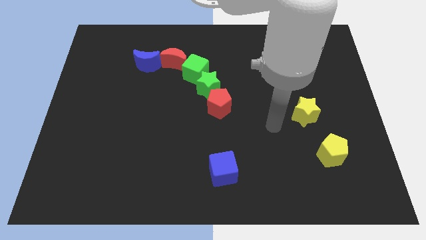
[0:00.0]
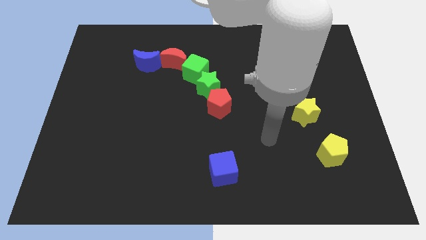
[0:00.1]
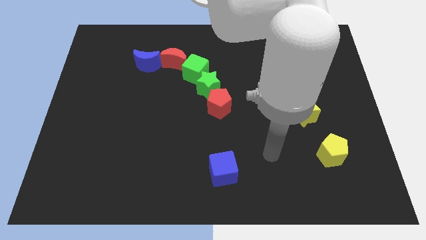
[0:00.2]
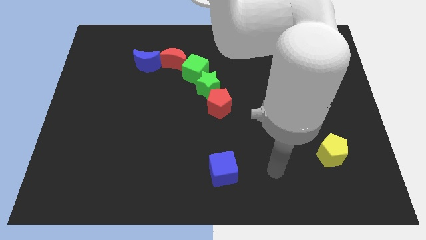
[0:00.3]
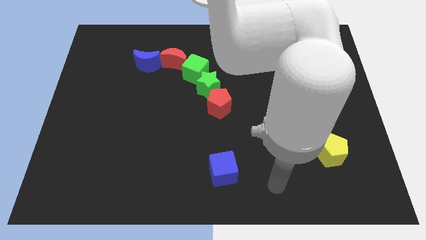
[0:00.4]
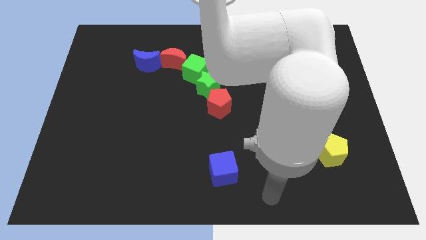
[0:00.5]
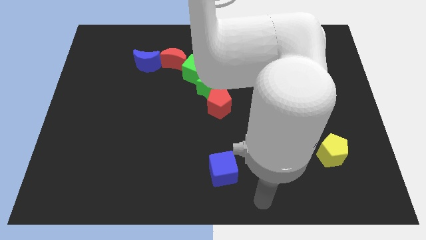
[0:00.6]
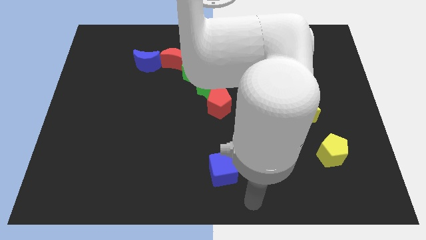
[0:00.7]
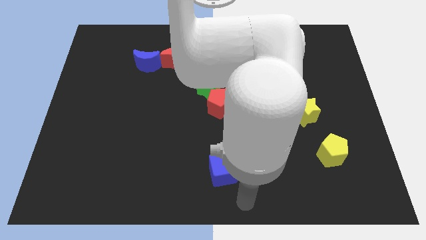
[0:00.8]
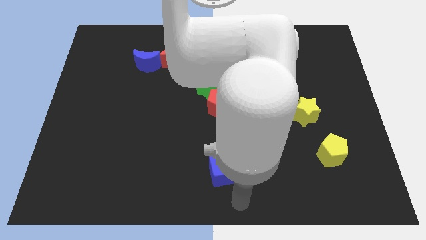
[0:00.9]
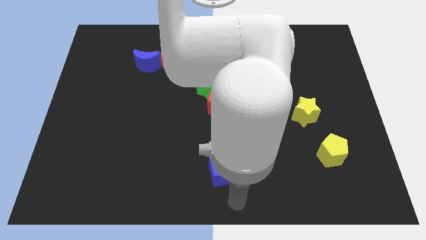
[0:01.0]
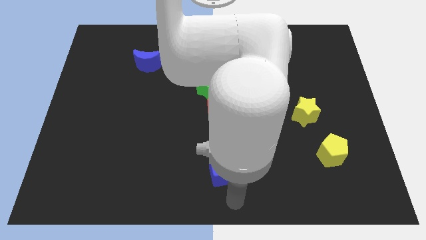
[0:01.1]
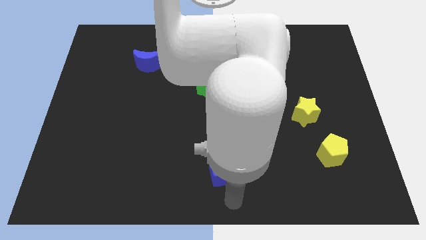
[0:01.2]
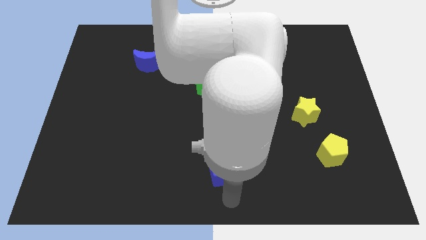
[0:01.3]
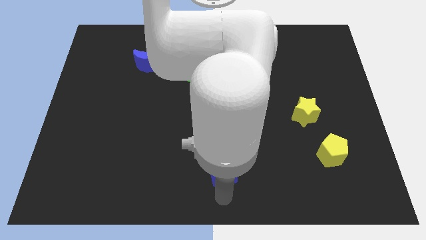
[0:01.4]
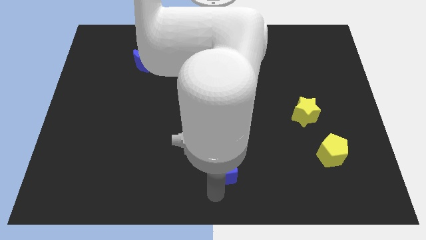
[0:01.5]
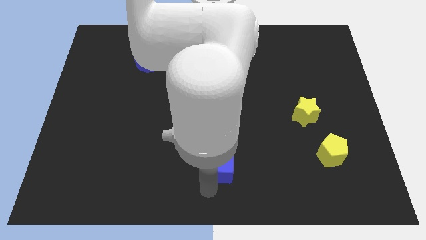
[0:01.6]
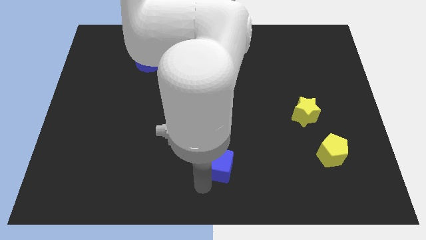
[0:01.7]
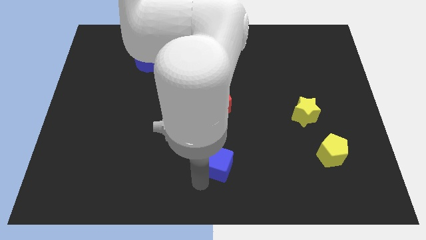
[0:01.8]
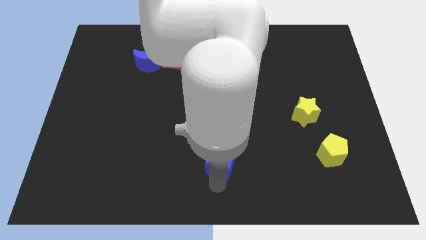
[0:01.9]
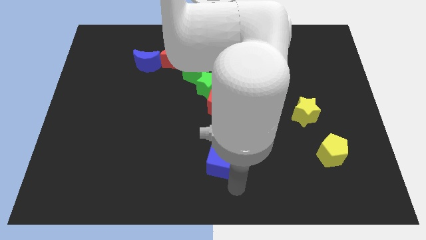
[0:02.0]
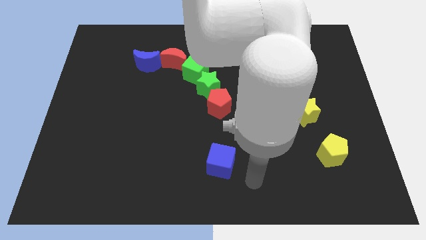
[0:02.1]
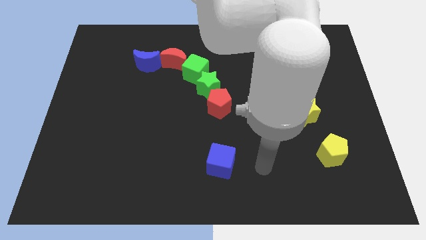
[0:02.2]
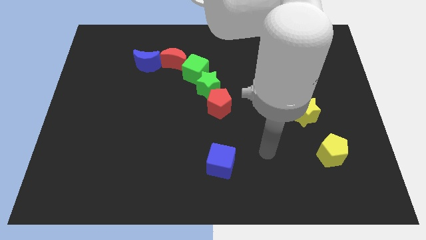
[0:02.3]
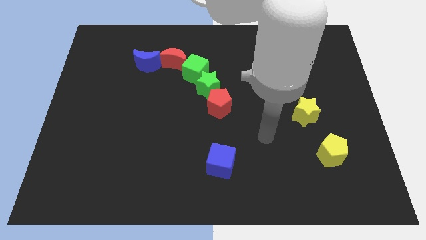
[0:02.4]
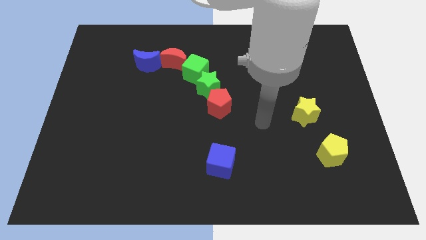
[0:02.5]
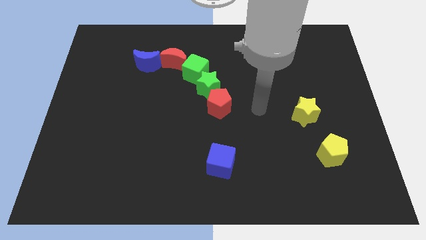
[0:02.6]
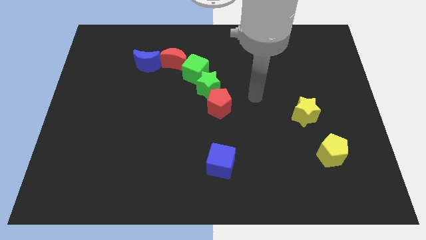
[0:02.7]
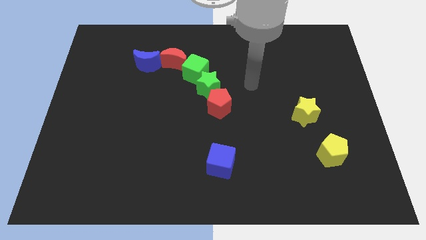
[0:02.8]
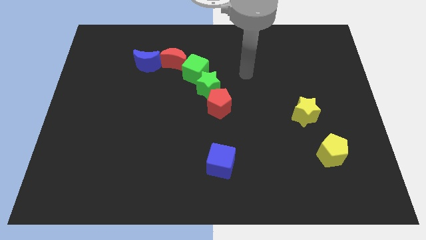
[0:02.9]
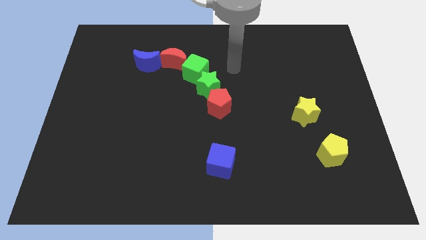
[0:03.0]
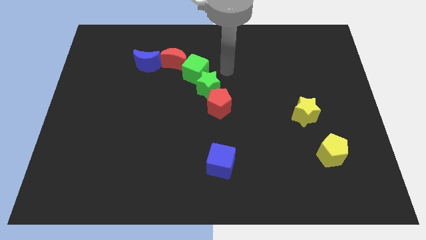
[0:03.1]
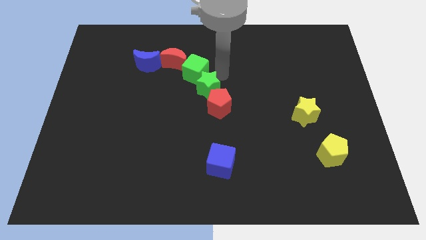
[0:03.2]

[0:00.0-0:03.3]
slightly move the blue cube to the top of the board

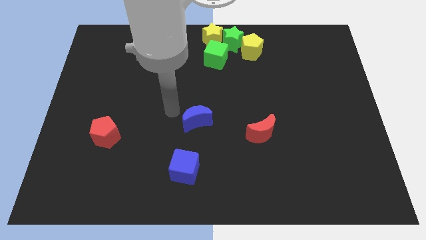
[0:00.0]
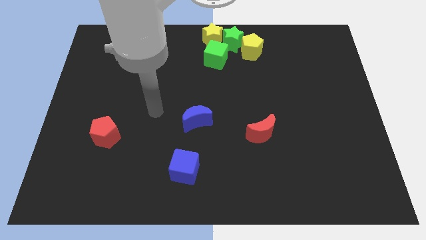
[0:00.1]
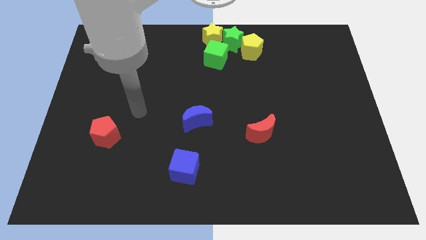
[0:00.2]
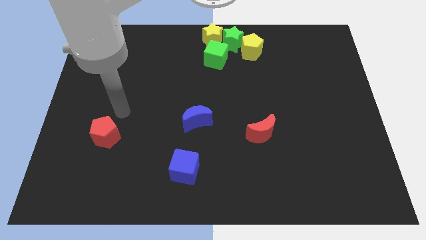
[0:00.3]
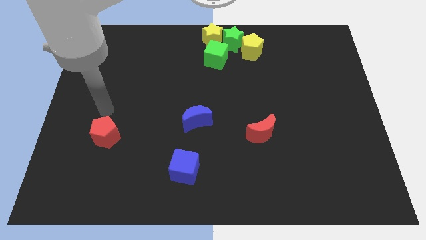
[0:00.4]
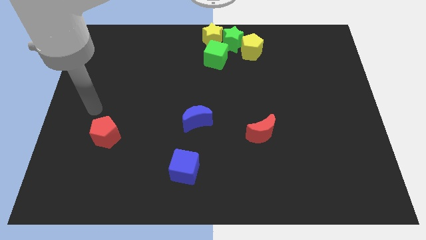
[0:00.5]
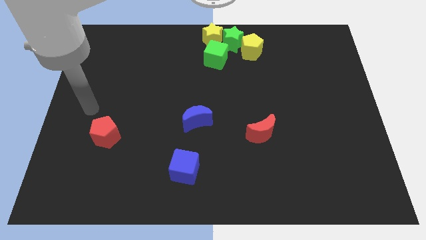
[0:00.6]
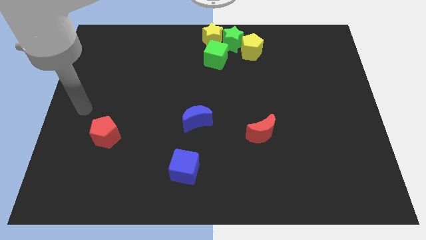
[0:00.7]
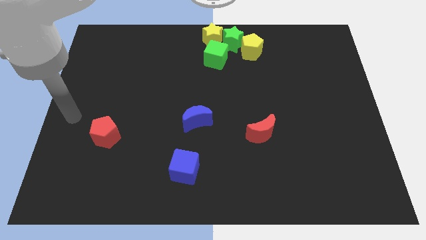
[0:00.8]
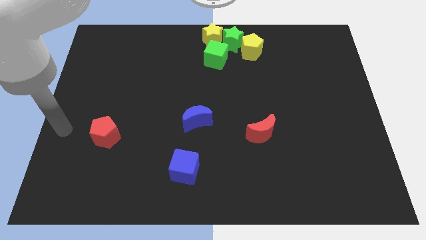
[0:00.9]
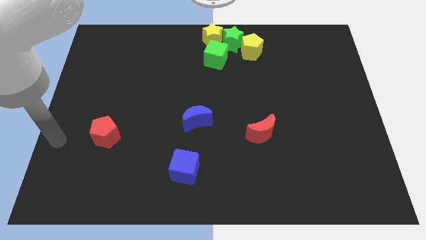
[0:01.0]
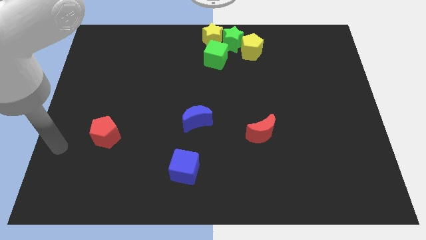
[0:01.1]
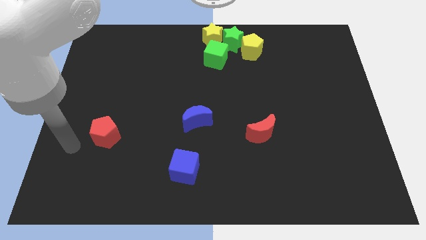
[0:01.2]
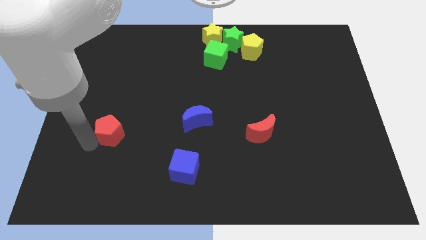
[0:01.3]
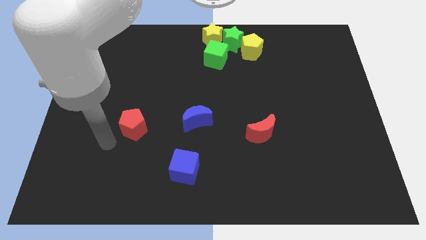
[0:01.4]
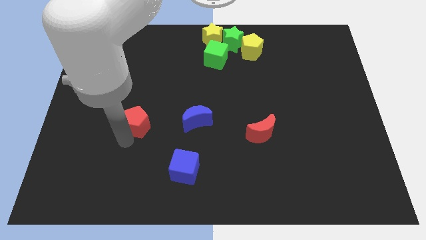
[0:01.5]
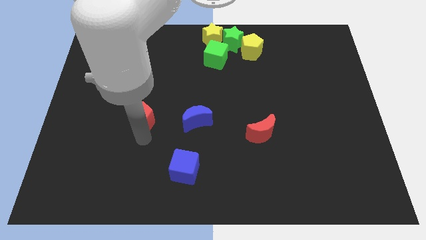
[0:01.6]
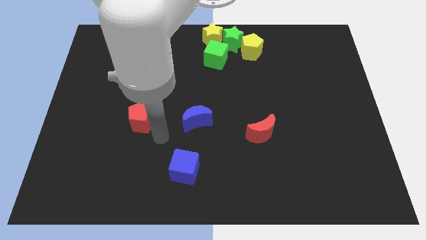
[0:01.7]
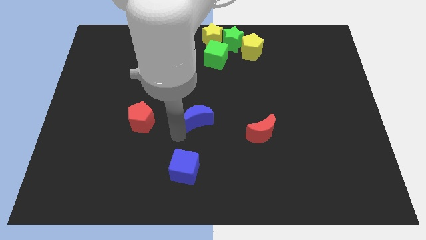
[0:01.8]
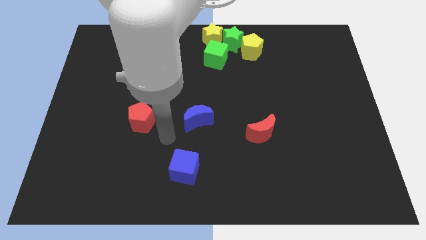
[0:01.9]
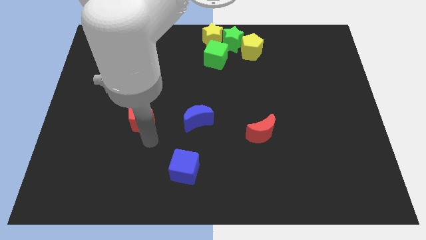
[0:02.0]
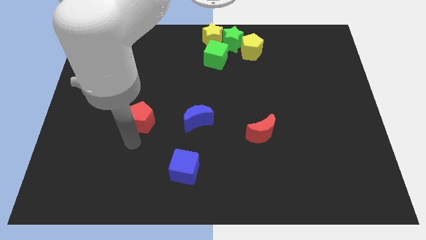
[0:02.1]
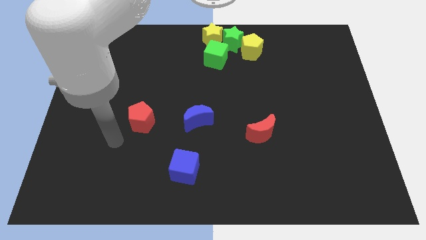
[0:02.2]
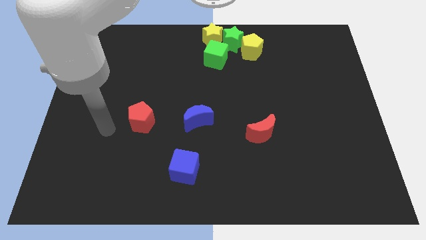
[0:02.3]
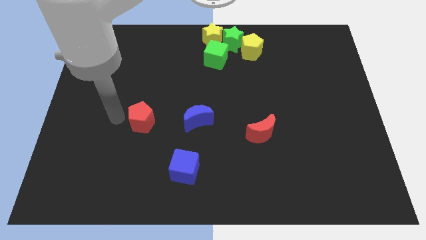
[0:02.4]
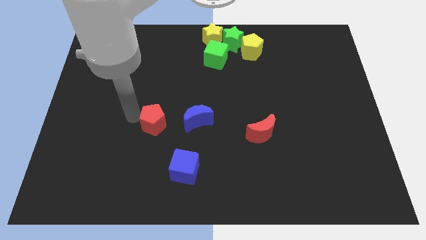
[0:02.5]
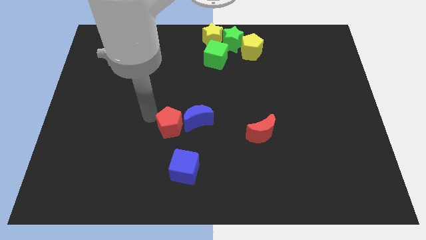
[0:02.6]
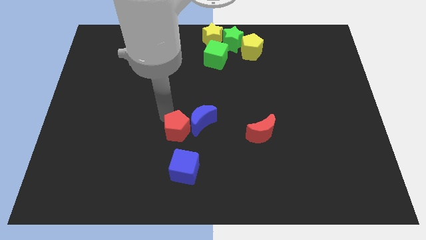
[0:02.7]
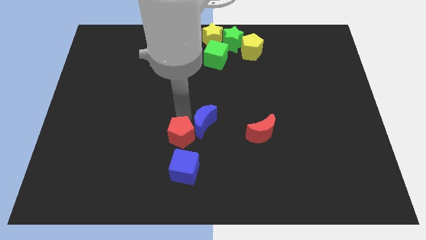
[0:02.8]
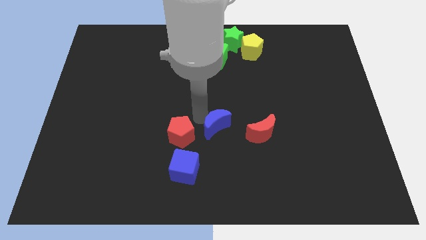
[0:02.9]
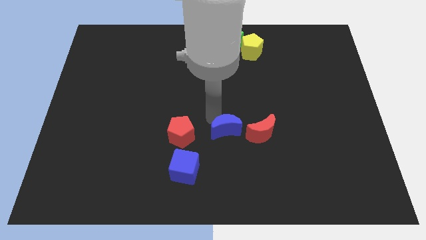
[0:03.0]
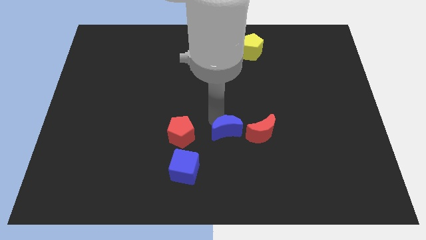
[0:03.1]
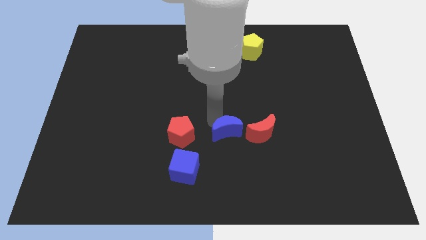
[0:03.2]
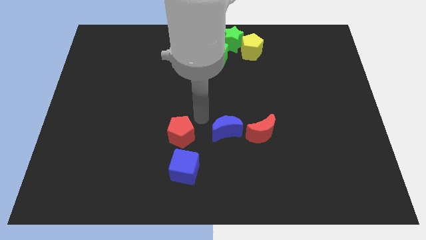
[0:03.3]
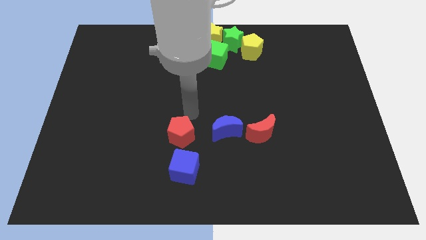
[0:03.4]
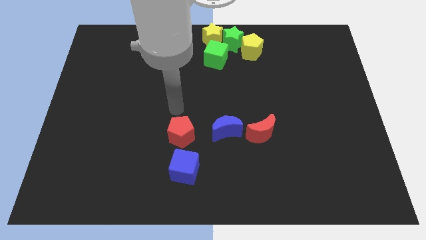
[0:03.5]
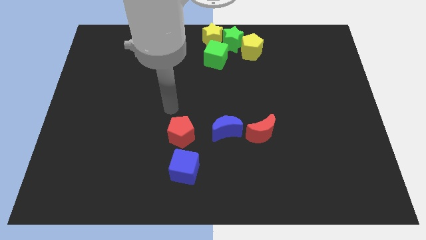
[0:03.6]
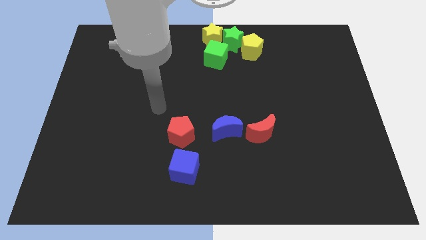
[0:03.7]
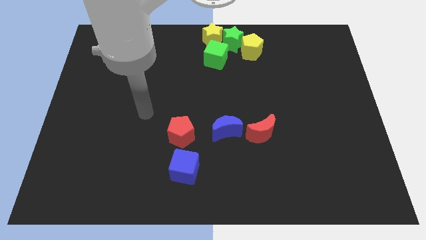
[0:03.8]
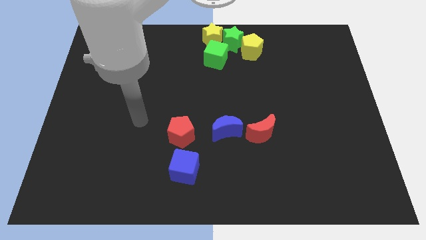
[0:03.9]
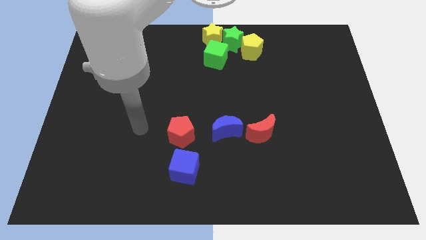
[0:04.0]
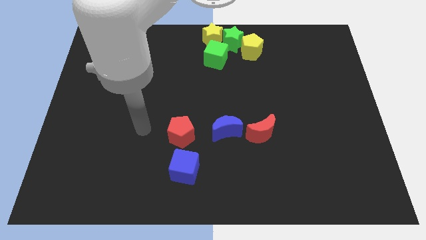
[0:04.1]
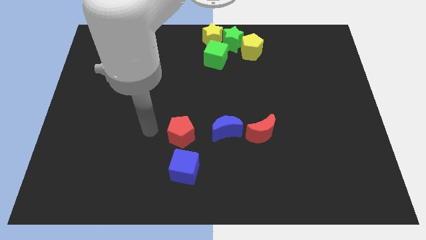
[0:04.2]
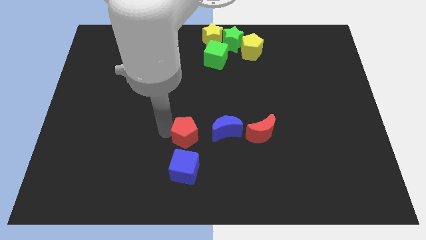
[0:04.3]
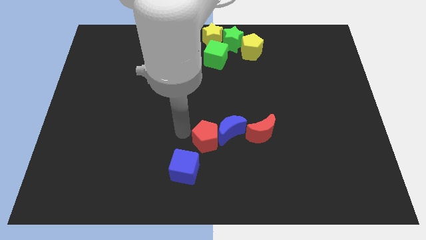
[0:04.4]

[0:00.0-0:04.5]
move the red pentagon above the blue cube

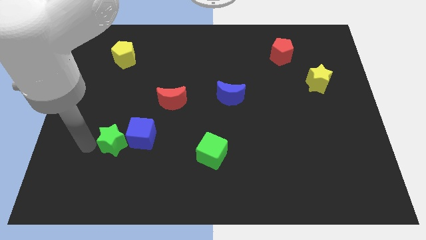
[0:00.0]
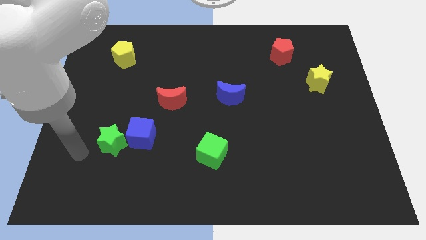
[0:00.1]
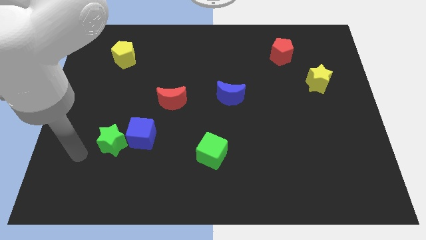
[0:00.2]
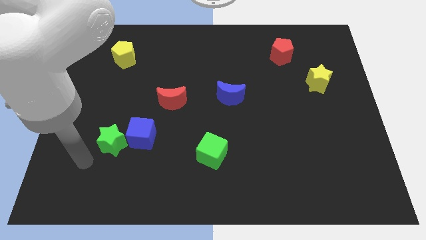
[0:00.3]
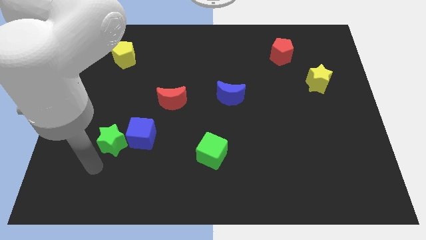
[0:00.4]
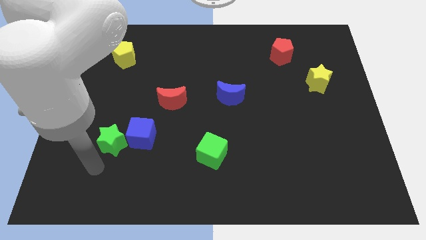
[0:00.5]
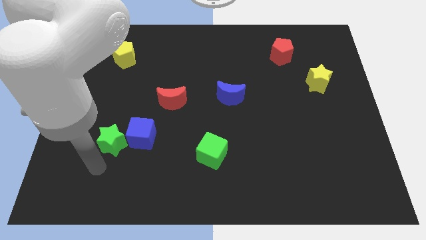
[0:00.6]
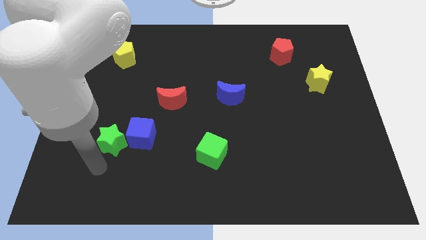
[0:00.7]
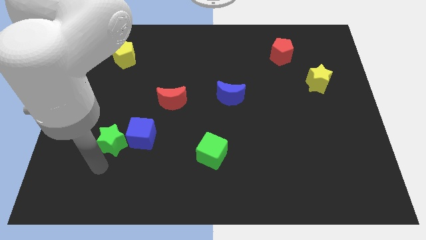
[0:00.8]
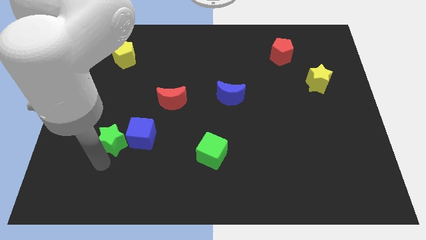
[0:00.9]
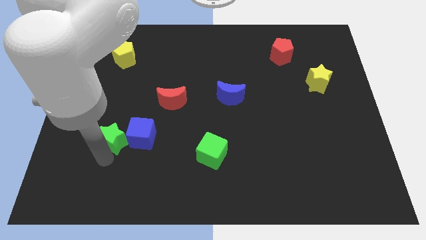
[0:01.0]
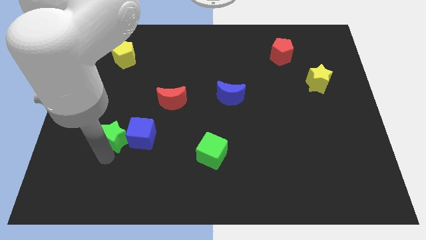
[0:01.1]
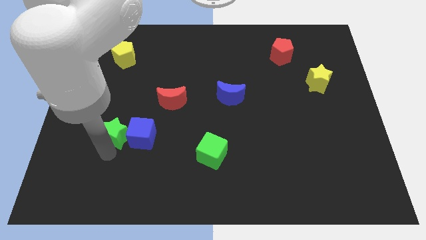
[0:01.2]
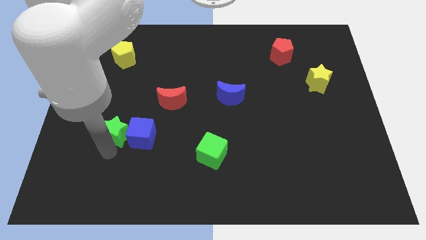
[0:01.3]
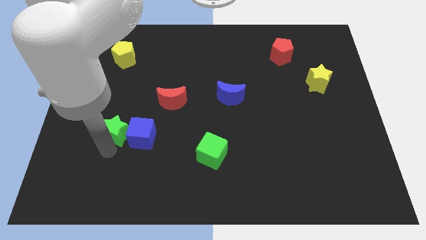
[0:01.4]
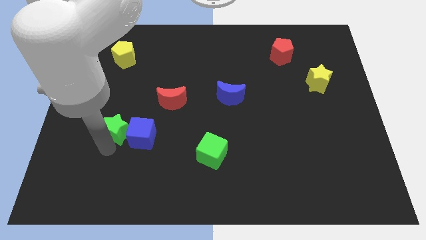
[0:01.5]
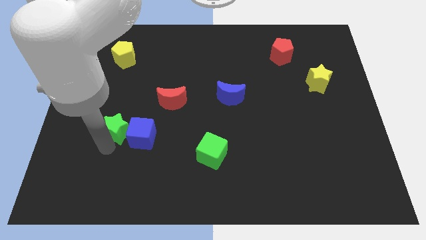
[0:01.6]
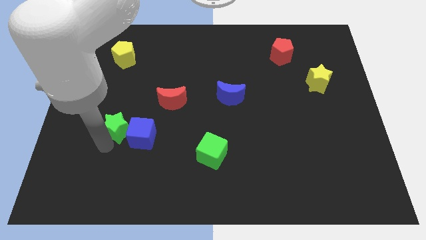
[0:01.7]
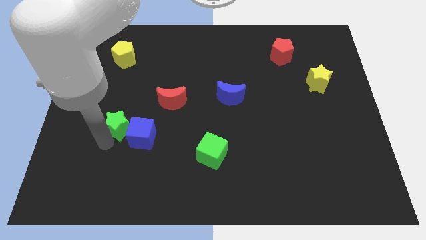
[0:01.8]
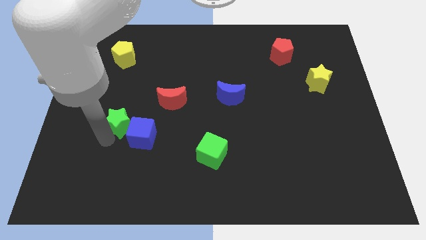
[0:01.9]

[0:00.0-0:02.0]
place the green star to the left of the blue cube
